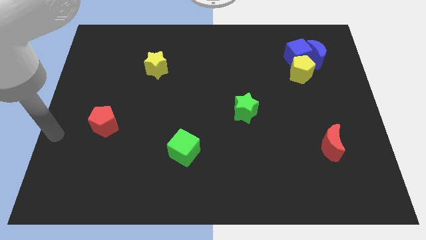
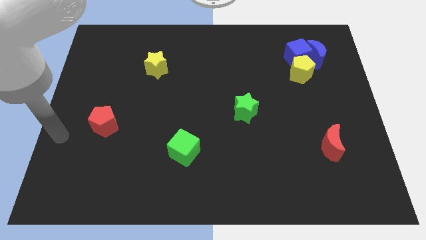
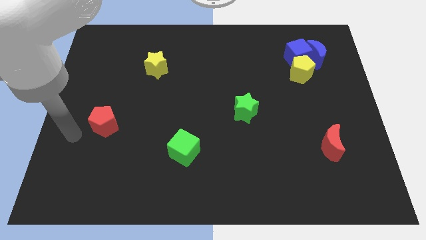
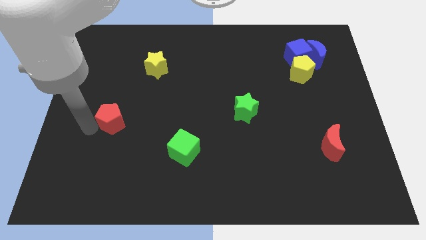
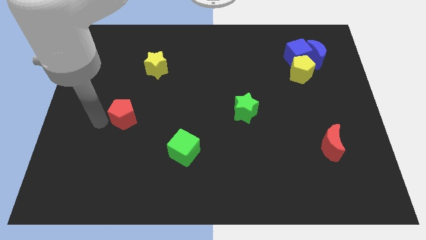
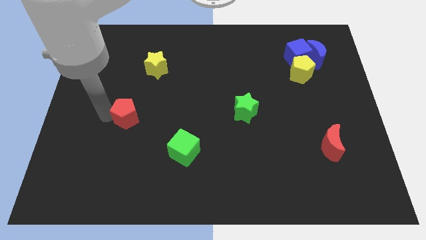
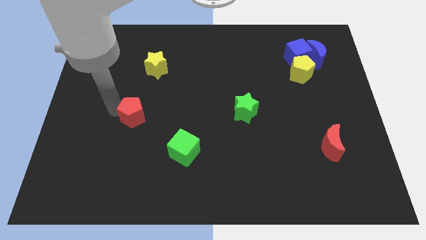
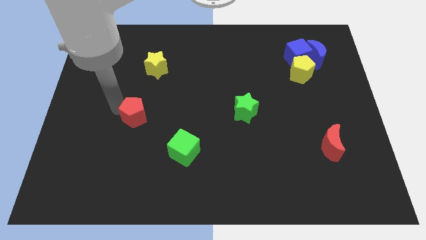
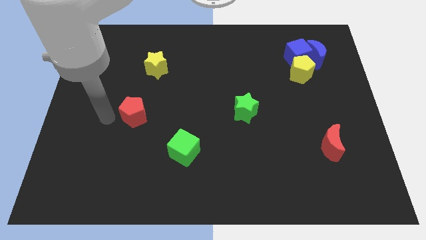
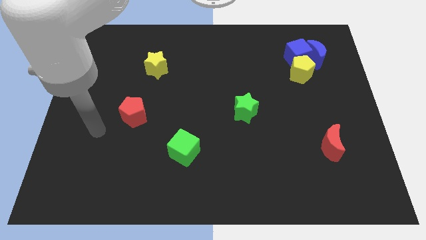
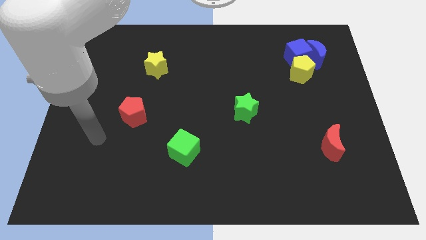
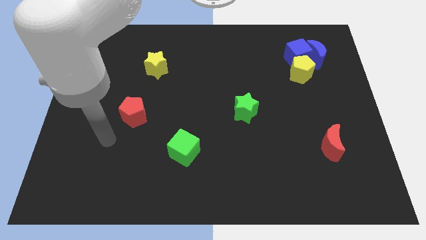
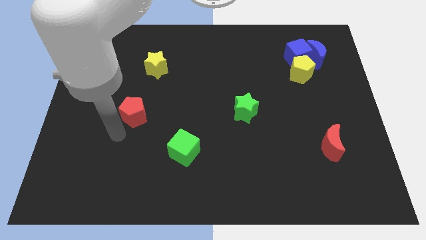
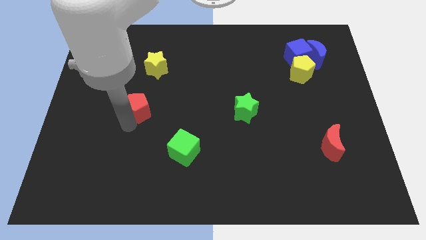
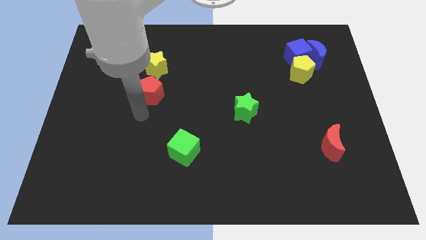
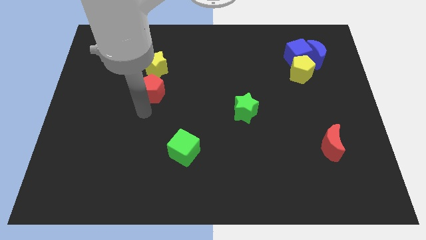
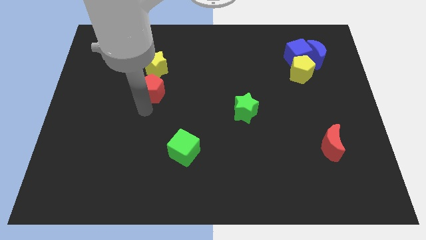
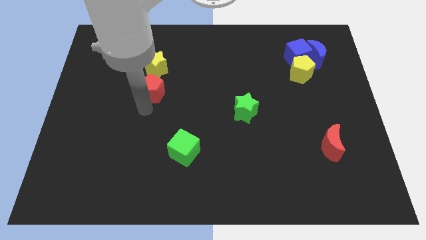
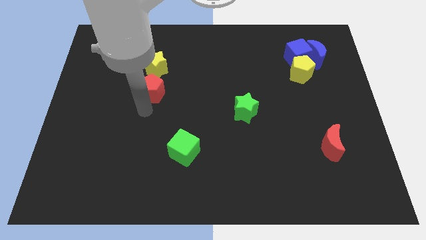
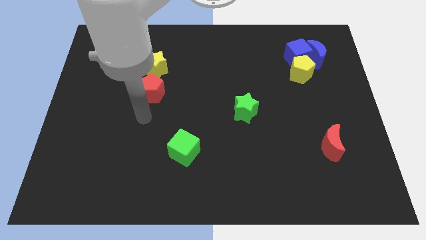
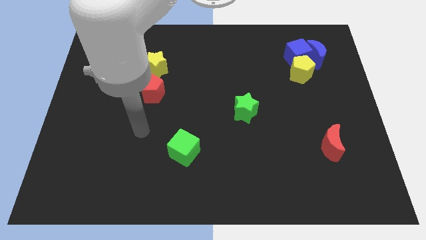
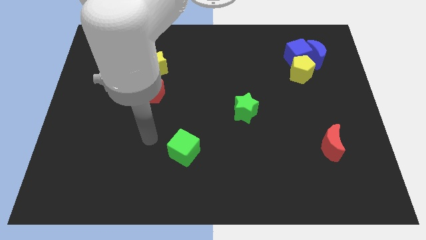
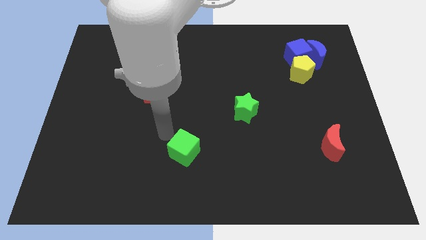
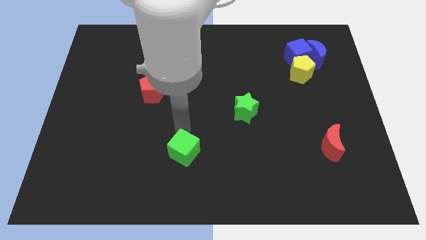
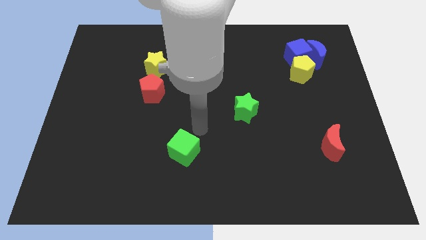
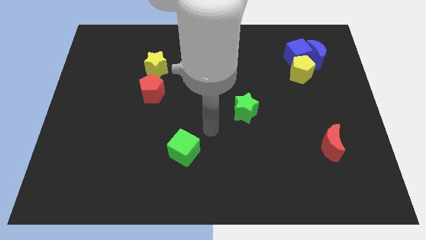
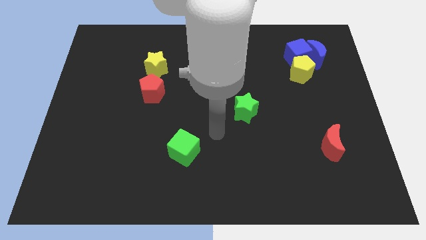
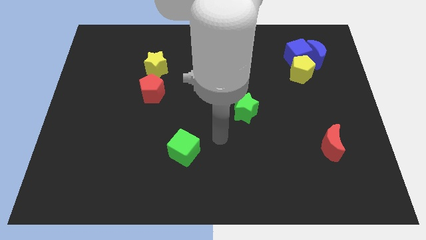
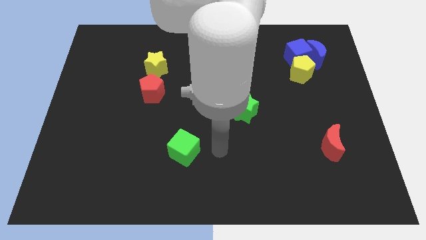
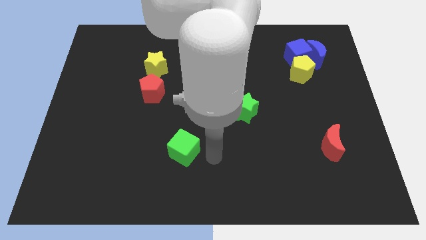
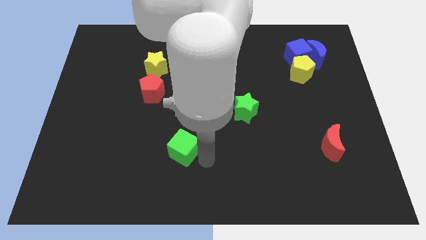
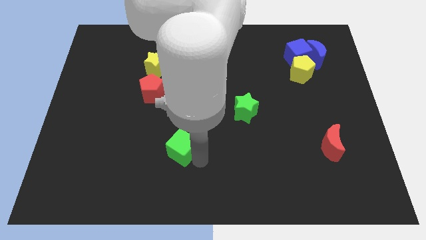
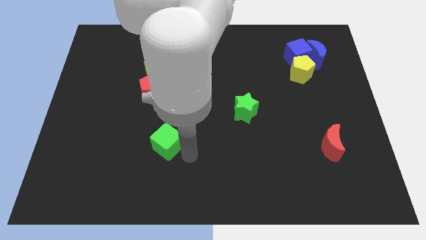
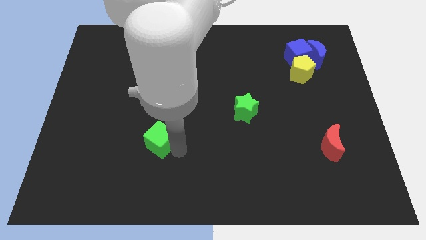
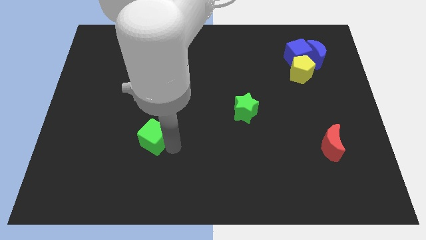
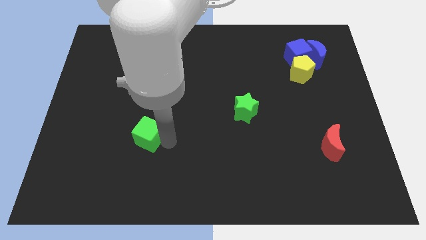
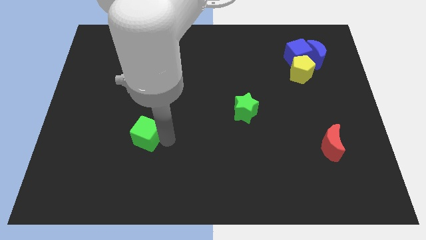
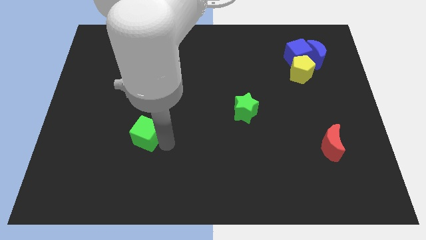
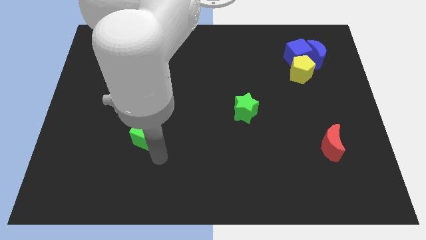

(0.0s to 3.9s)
move the red pentagon to the bottom of the yellow star

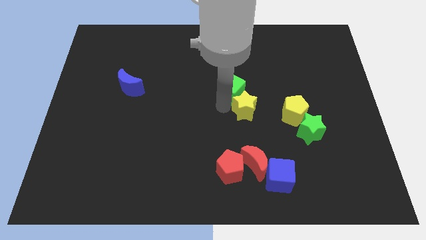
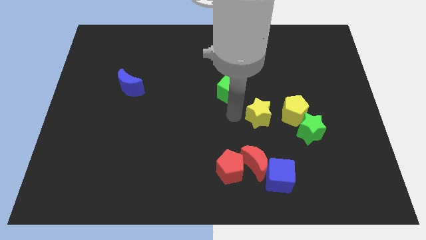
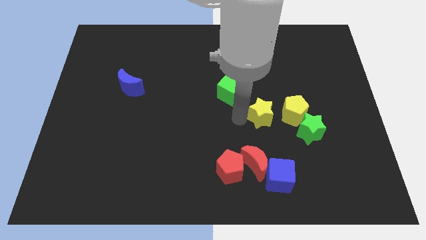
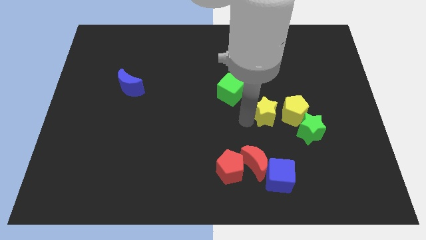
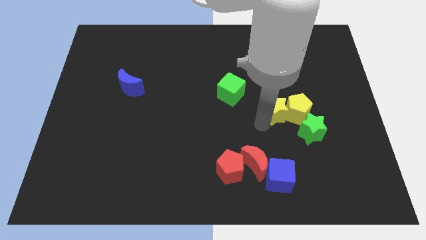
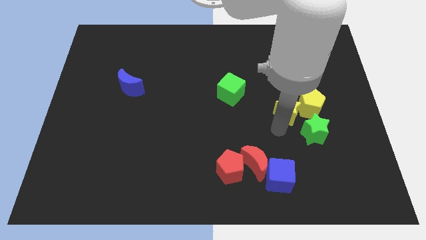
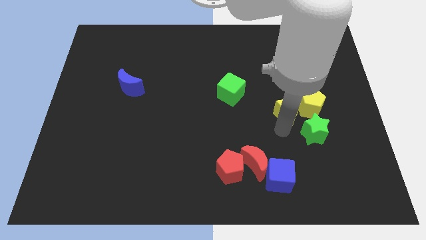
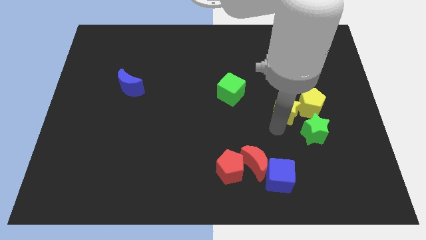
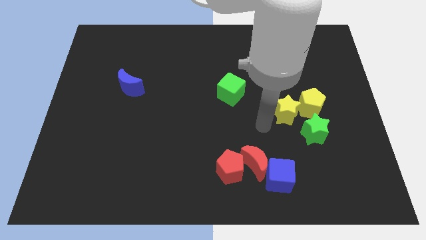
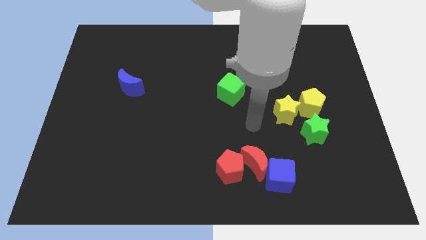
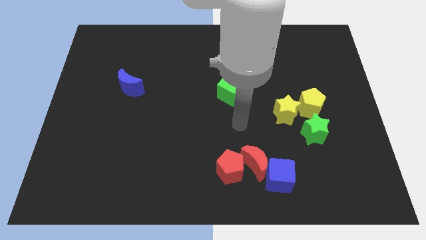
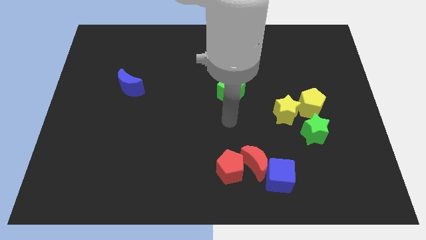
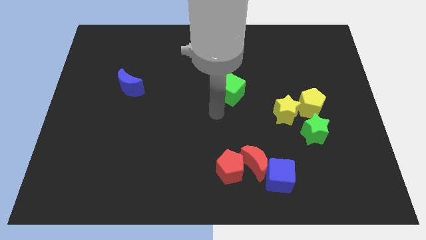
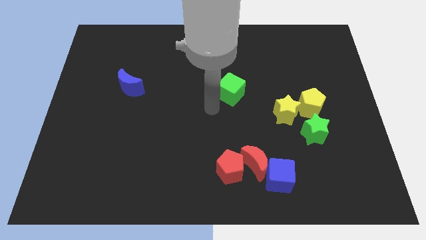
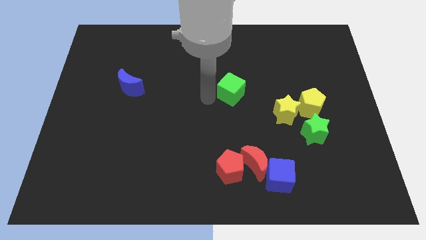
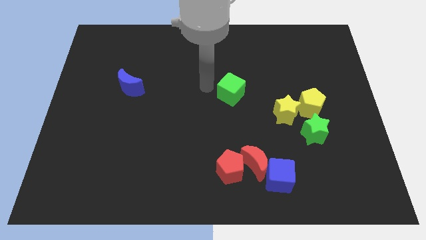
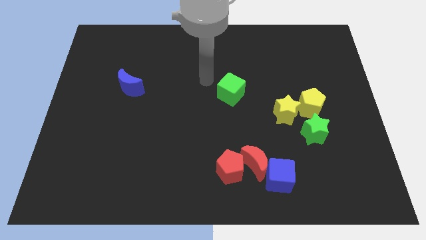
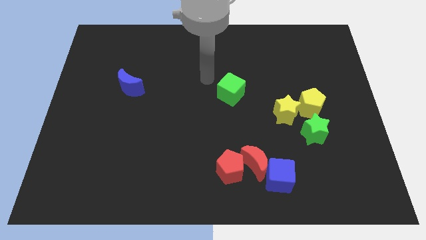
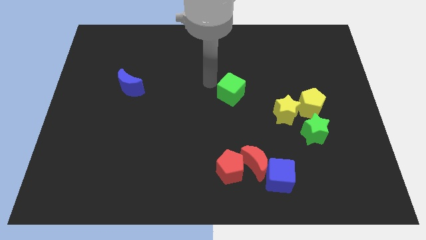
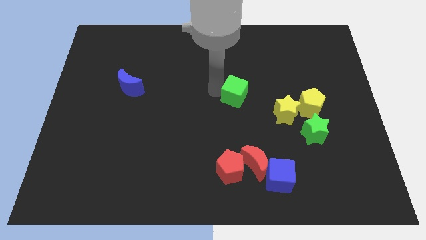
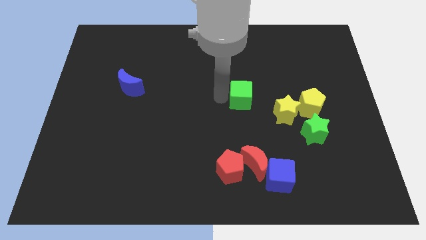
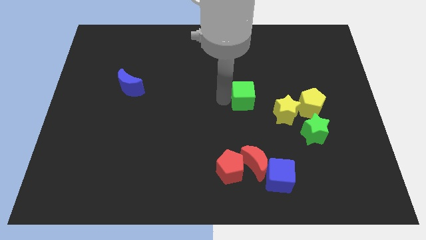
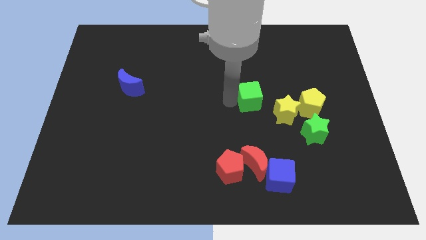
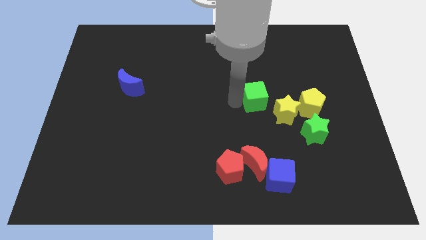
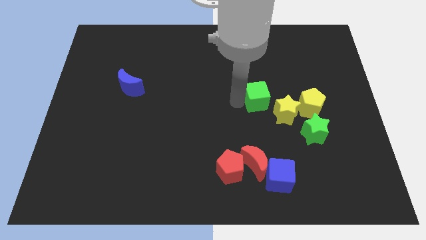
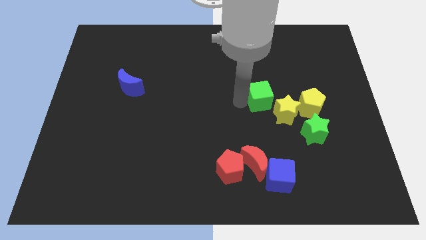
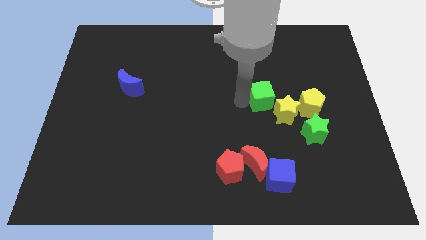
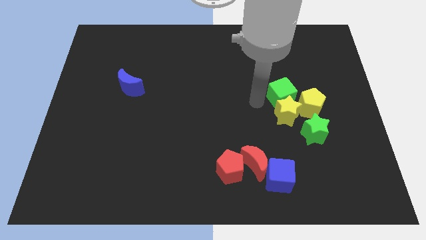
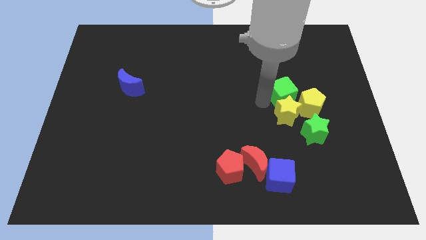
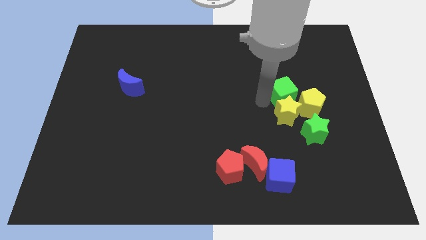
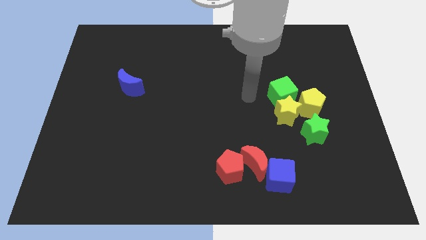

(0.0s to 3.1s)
push the green and yellow blocks towards the center right side of the board

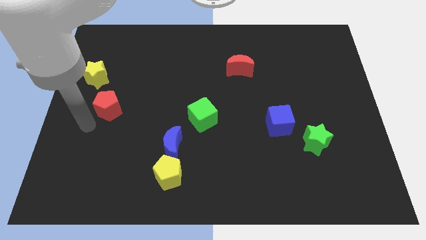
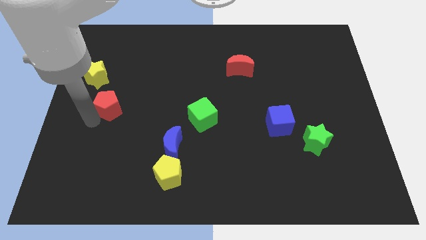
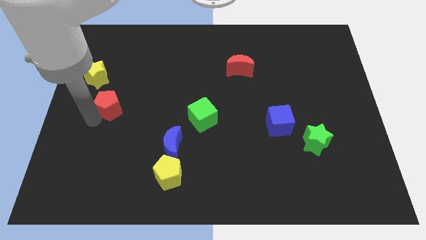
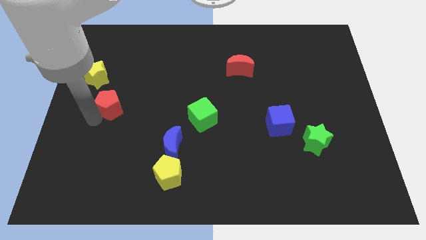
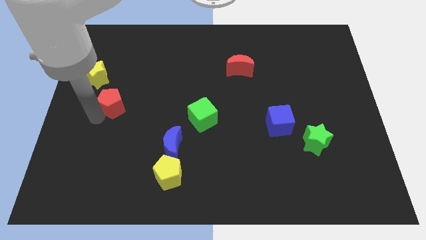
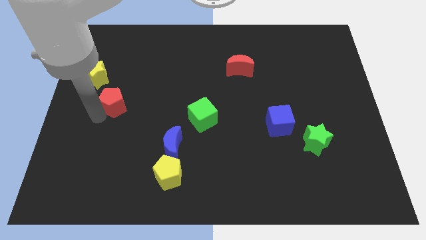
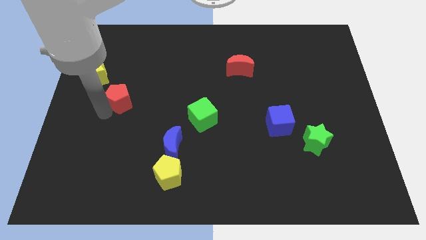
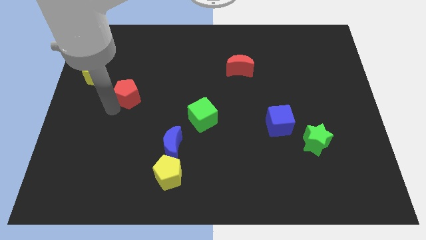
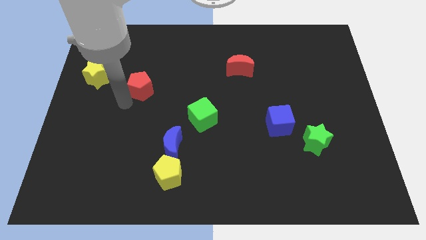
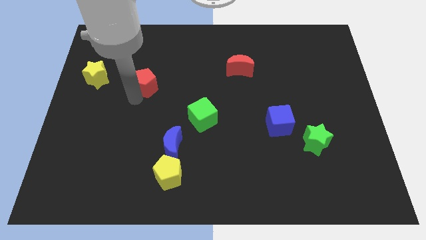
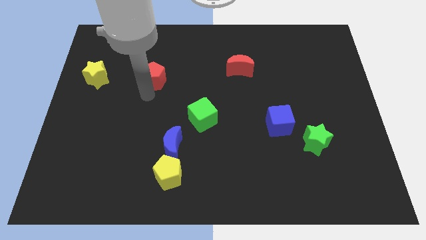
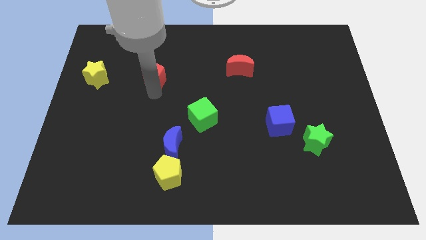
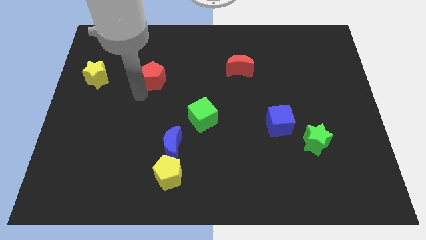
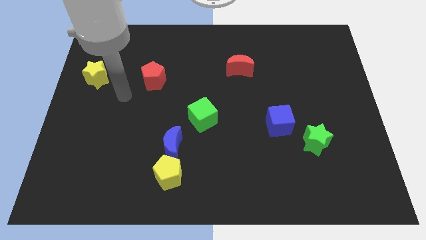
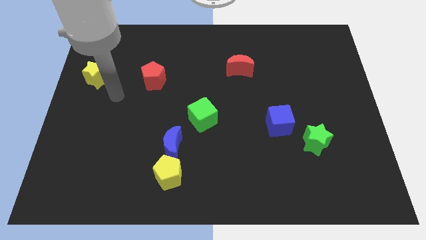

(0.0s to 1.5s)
push the red pentagon towards the top side of the board

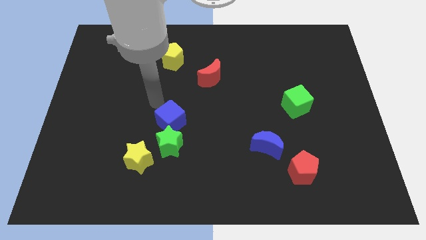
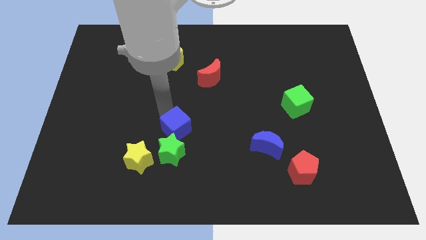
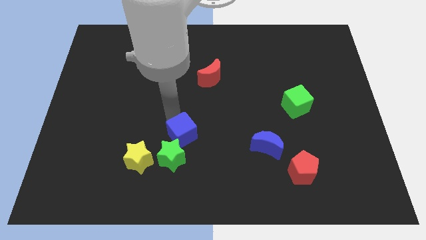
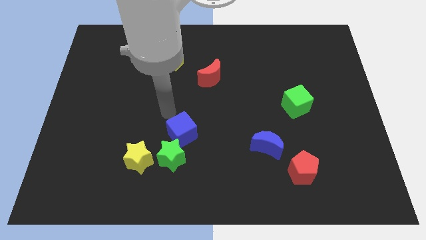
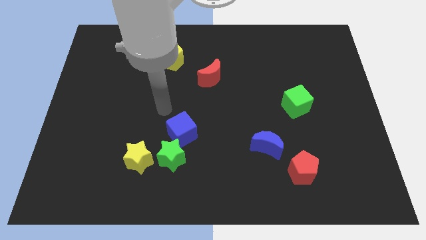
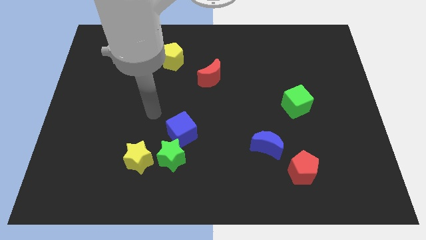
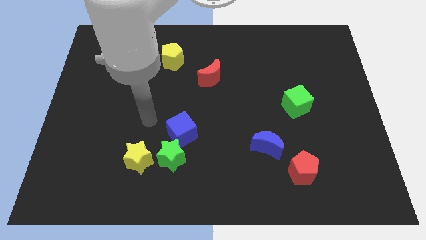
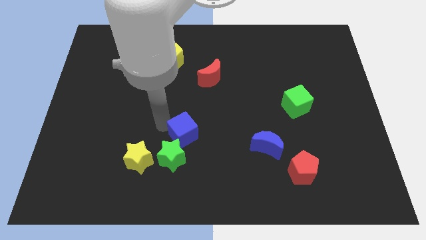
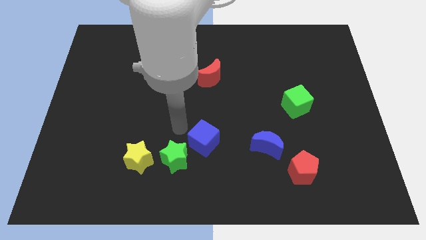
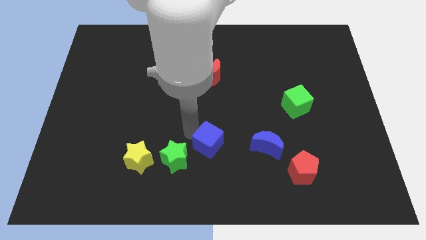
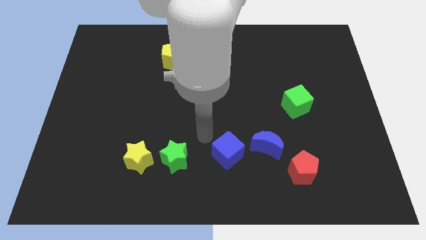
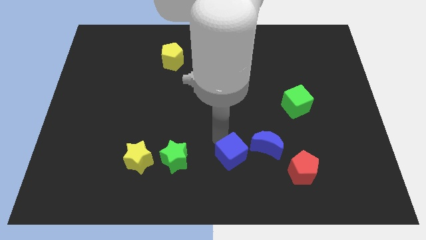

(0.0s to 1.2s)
move blue cube in between blue crescent and green star
